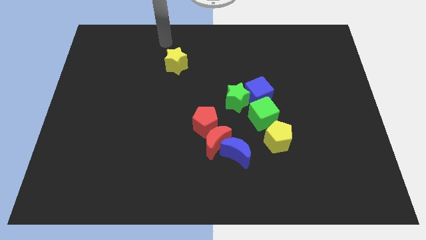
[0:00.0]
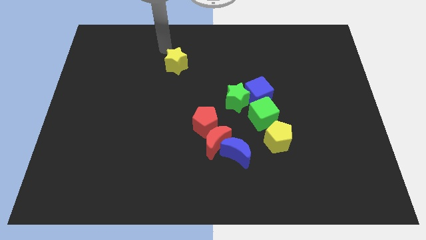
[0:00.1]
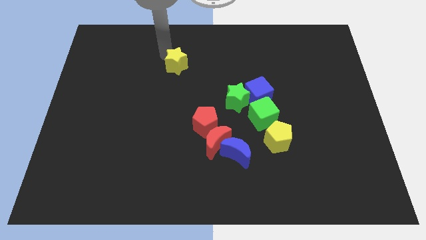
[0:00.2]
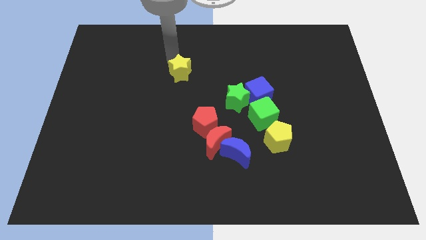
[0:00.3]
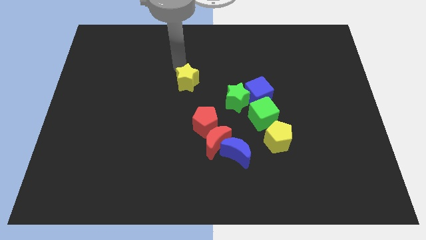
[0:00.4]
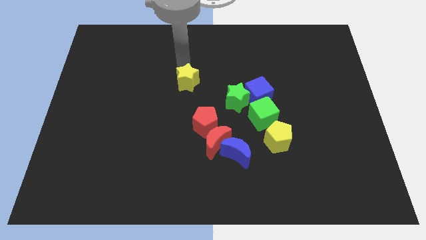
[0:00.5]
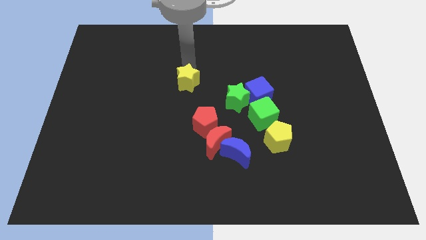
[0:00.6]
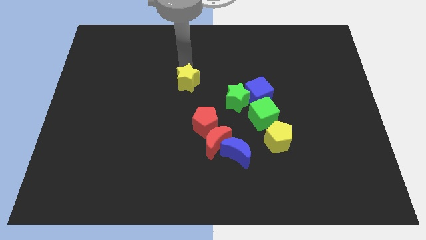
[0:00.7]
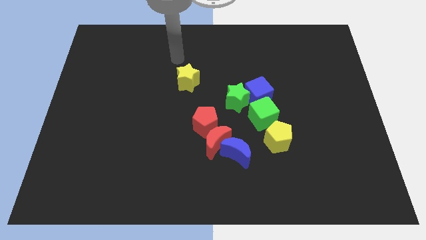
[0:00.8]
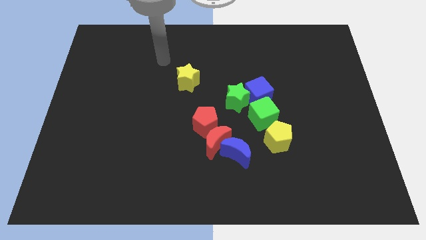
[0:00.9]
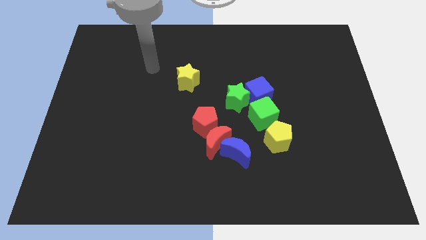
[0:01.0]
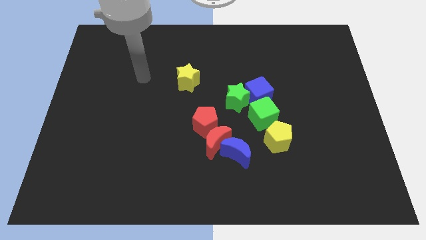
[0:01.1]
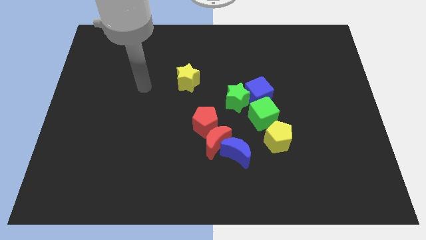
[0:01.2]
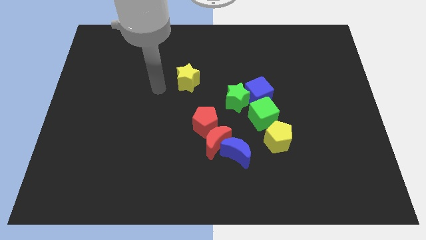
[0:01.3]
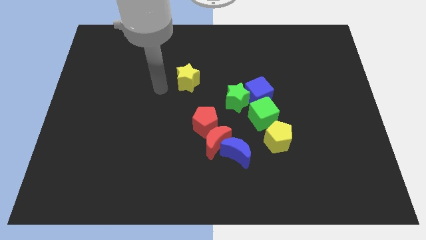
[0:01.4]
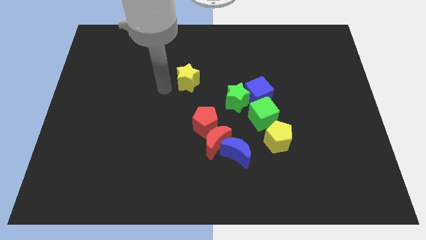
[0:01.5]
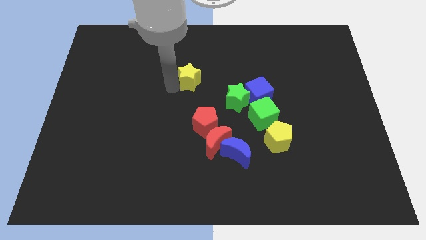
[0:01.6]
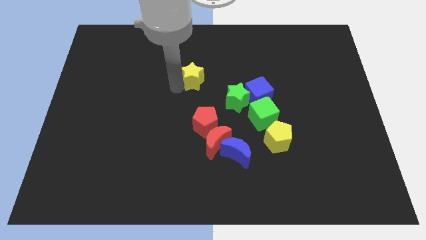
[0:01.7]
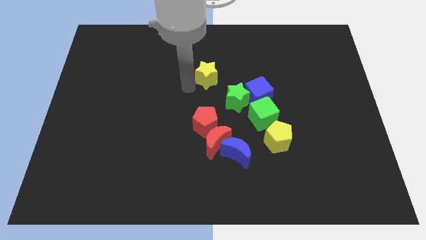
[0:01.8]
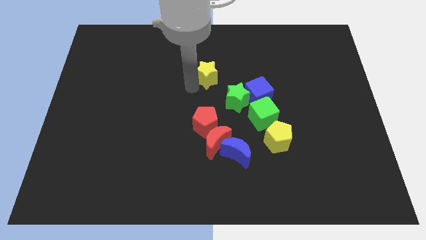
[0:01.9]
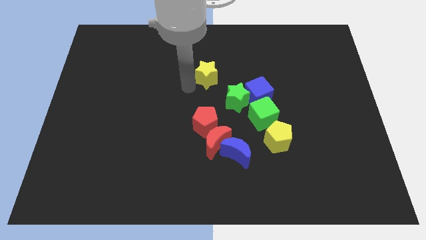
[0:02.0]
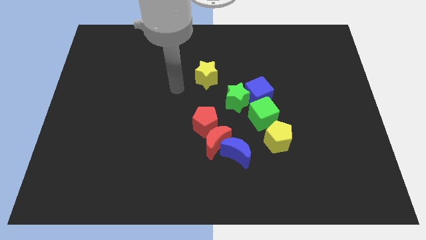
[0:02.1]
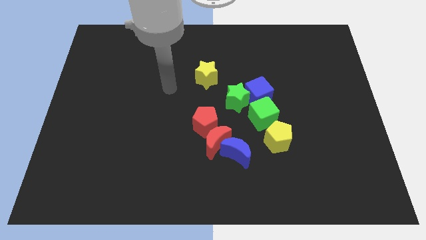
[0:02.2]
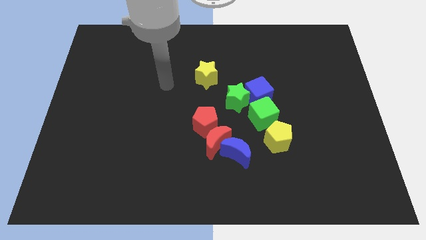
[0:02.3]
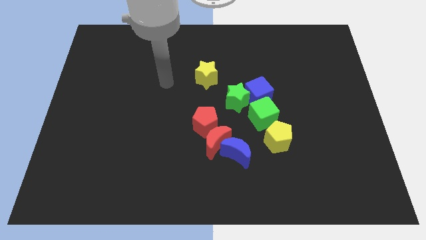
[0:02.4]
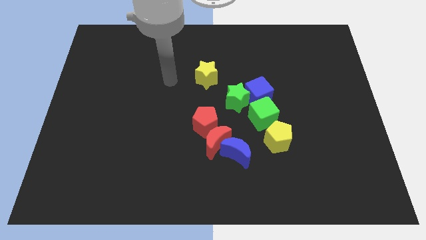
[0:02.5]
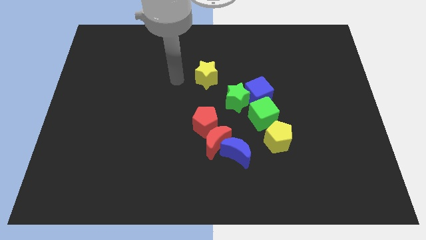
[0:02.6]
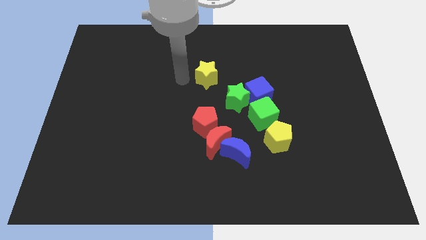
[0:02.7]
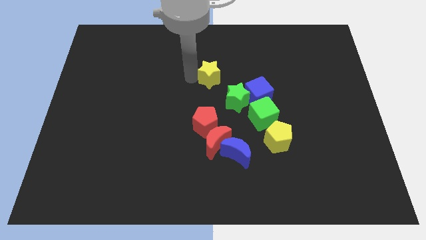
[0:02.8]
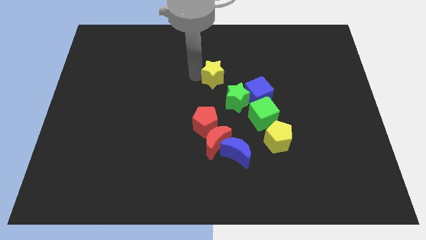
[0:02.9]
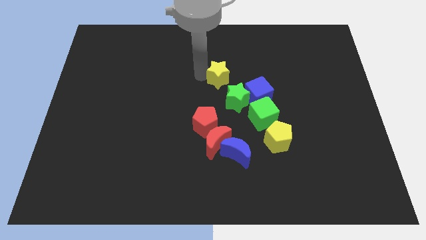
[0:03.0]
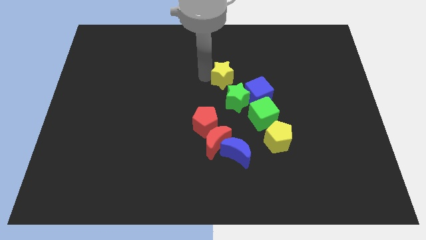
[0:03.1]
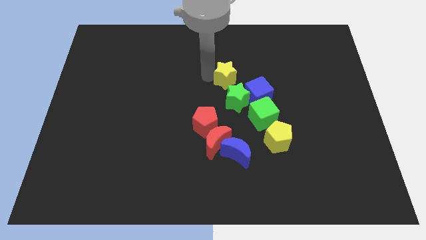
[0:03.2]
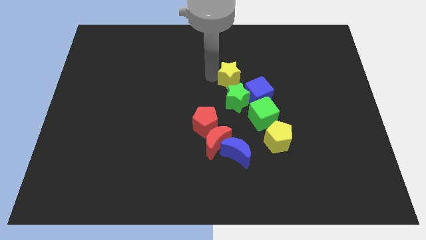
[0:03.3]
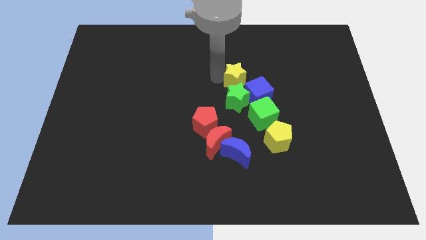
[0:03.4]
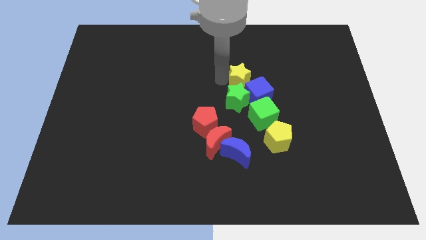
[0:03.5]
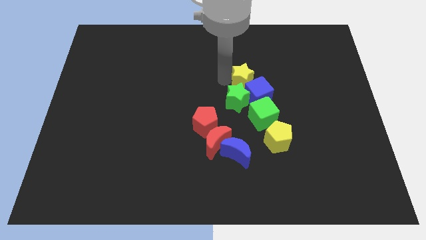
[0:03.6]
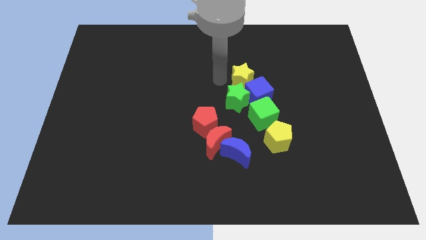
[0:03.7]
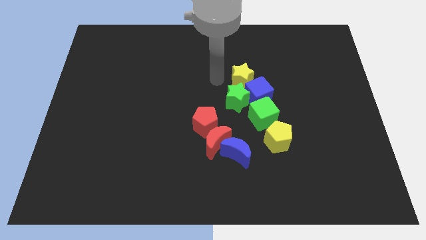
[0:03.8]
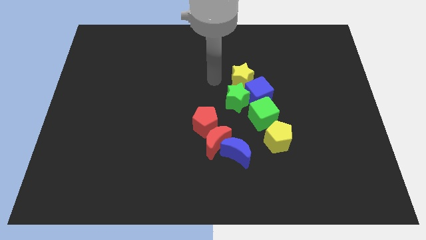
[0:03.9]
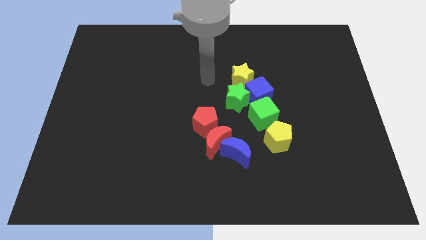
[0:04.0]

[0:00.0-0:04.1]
place the yellow star on top of the green star

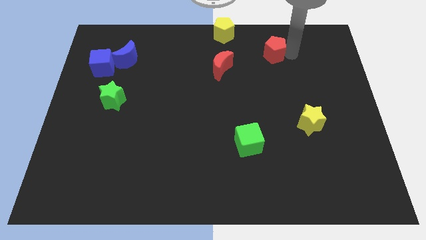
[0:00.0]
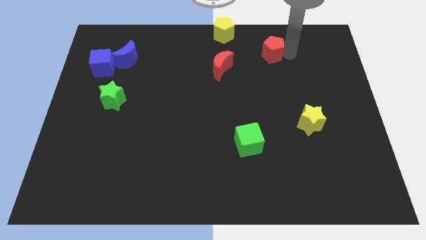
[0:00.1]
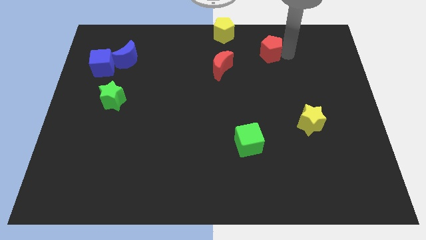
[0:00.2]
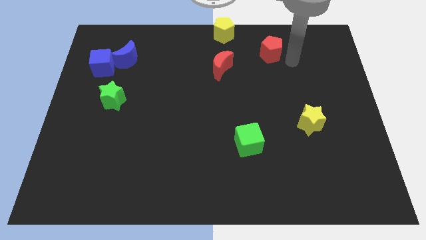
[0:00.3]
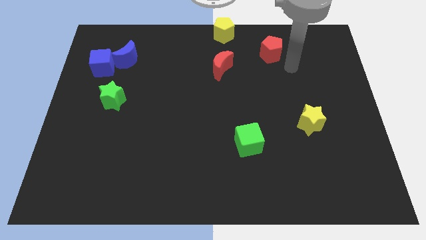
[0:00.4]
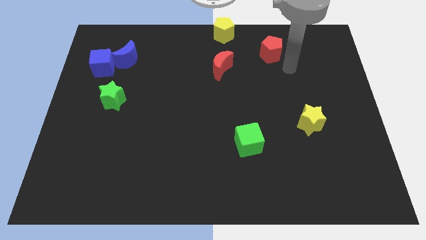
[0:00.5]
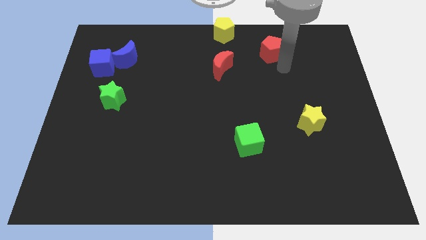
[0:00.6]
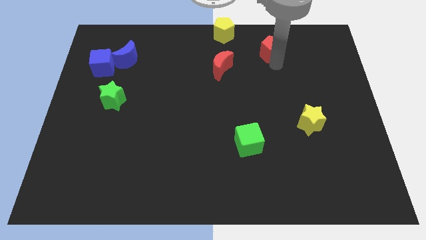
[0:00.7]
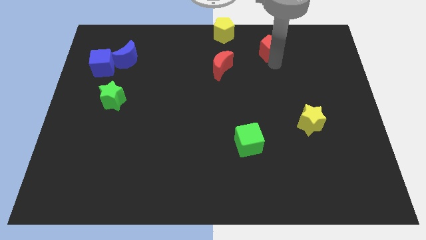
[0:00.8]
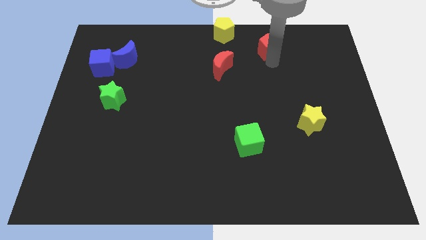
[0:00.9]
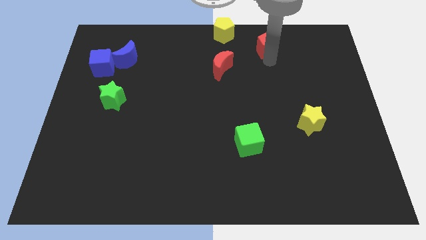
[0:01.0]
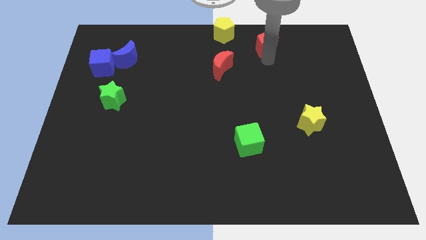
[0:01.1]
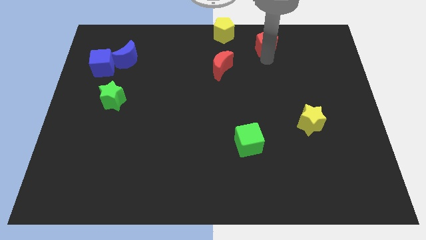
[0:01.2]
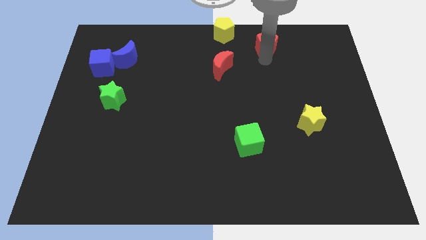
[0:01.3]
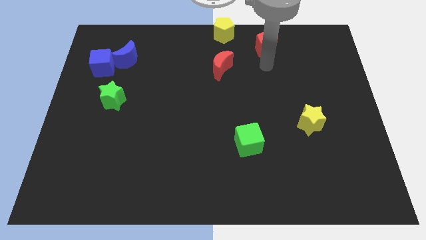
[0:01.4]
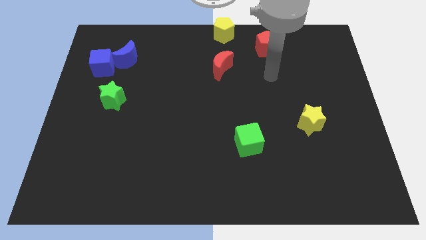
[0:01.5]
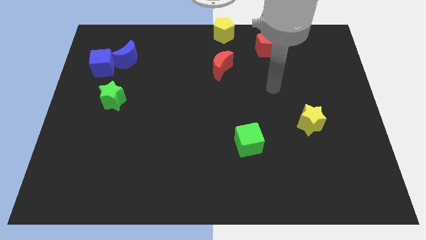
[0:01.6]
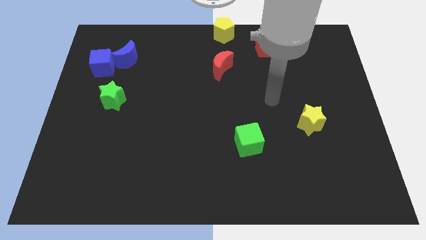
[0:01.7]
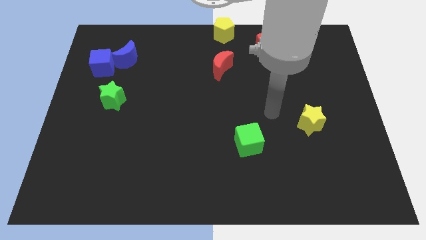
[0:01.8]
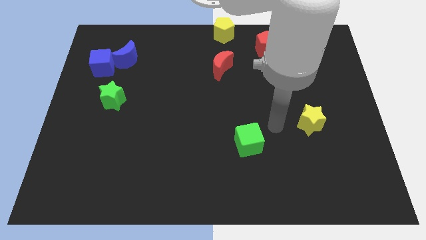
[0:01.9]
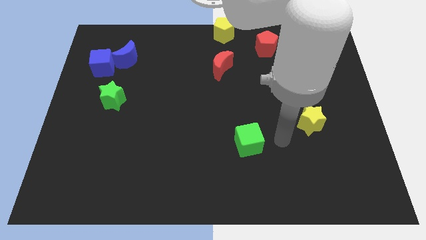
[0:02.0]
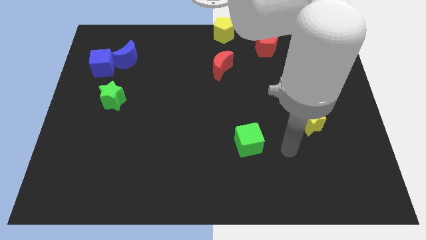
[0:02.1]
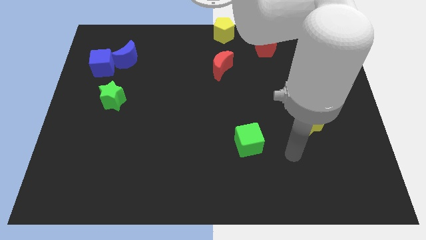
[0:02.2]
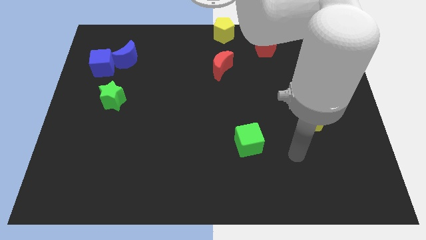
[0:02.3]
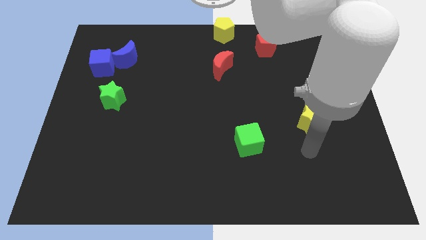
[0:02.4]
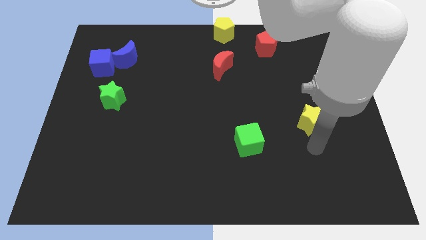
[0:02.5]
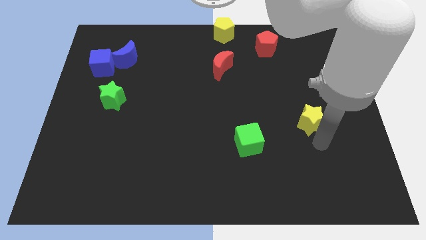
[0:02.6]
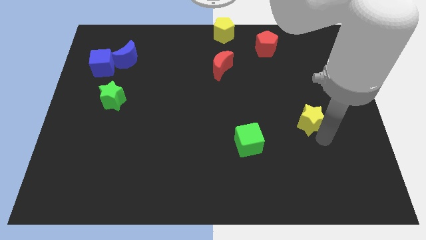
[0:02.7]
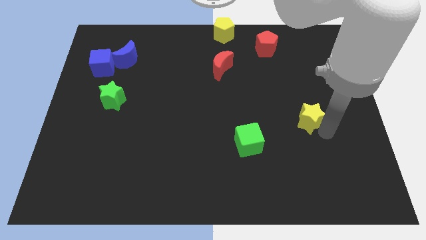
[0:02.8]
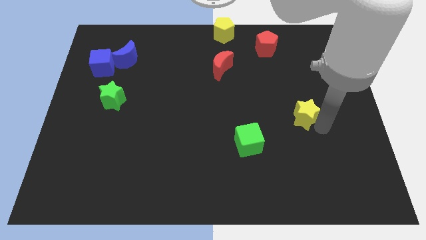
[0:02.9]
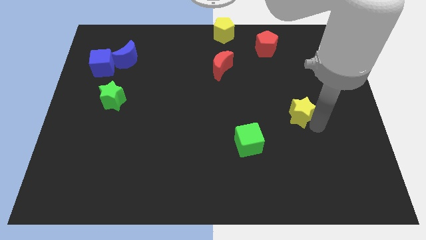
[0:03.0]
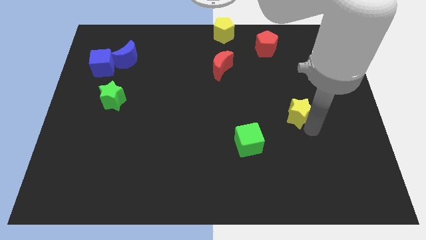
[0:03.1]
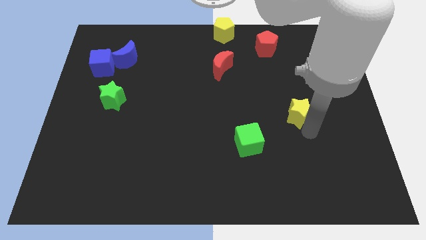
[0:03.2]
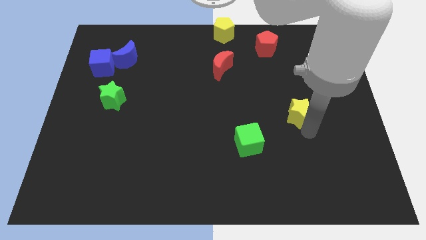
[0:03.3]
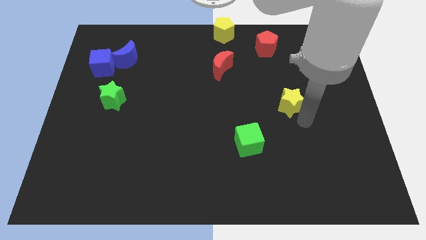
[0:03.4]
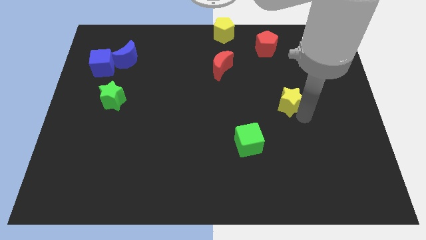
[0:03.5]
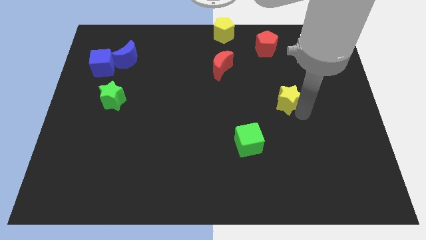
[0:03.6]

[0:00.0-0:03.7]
push yellow star slightly upward

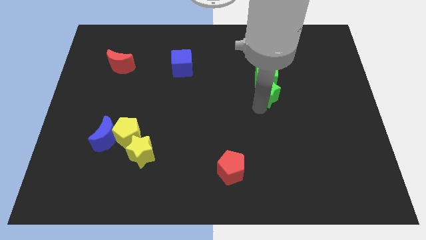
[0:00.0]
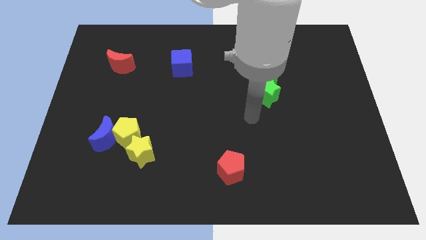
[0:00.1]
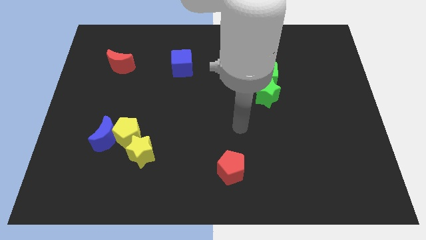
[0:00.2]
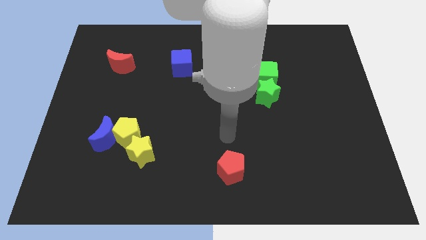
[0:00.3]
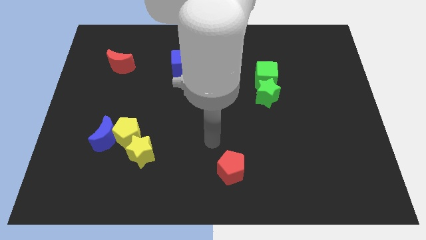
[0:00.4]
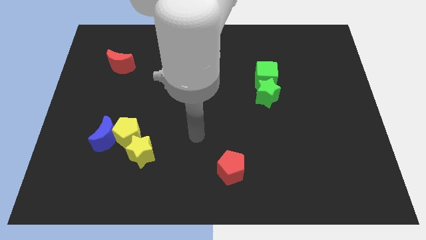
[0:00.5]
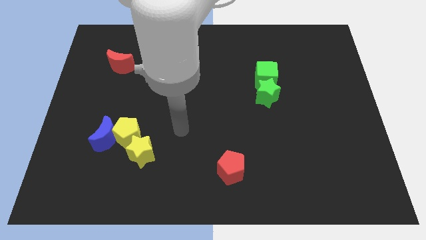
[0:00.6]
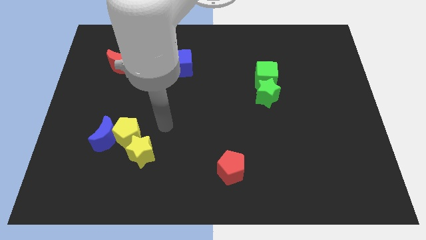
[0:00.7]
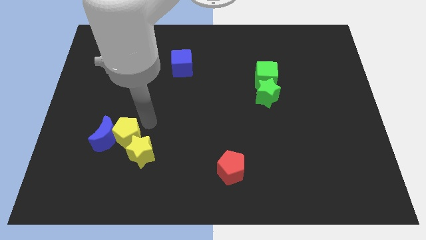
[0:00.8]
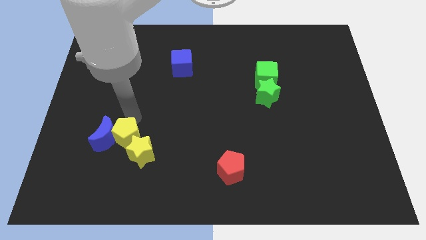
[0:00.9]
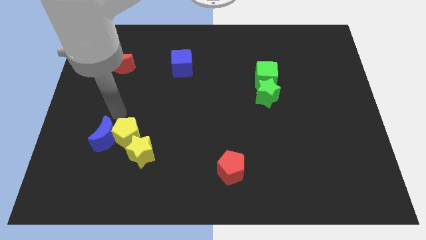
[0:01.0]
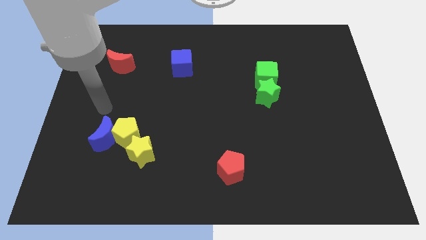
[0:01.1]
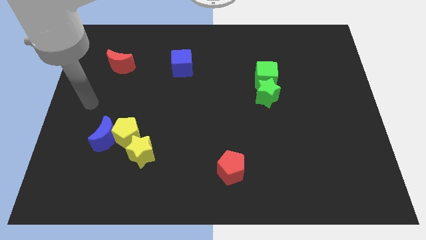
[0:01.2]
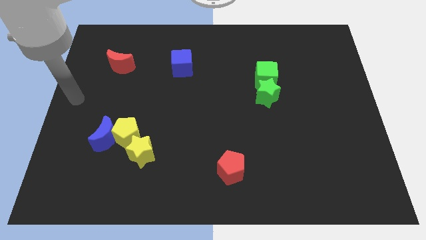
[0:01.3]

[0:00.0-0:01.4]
move arm away from green star

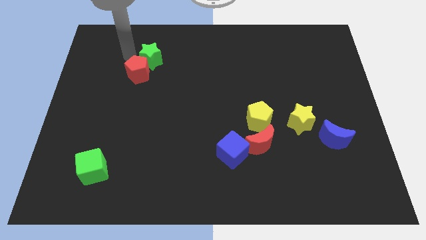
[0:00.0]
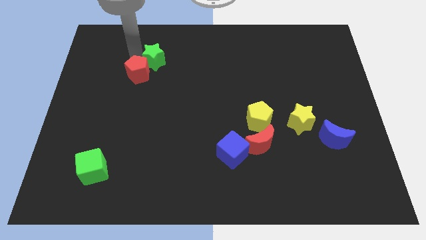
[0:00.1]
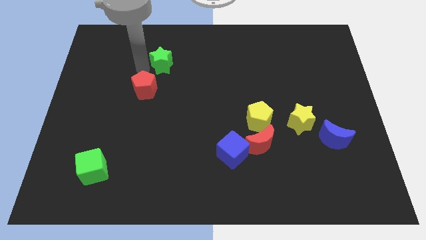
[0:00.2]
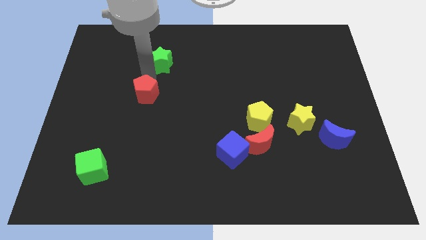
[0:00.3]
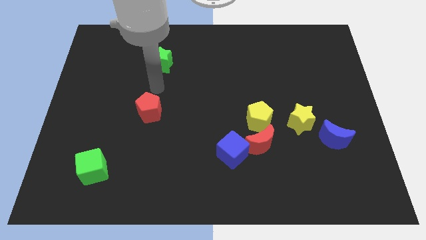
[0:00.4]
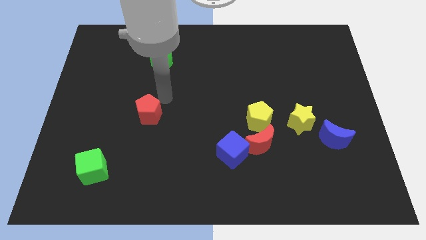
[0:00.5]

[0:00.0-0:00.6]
separate red pentagon from green star
